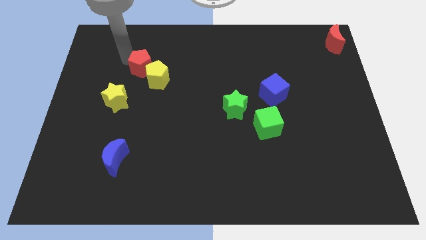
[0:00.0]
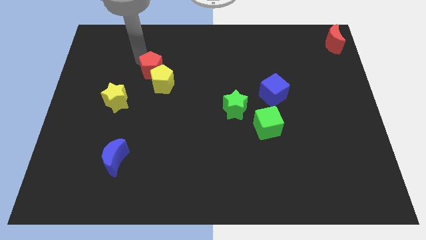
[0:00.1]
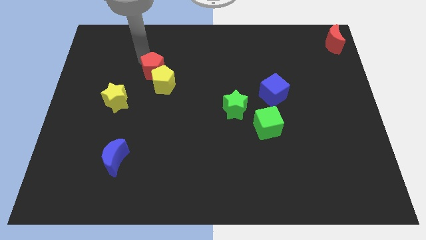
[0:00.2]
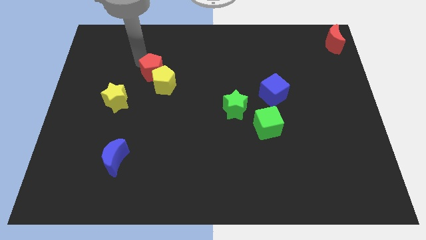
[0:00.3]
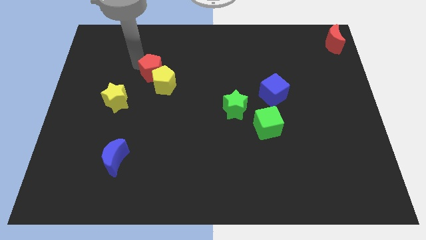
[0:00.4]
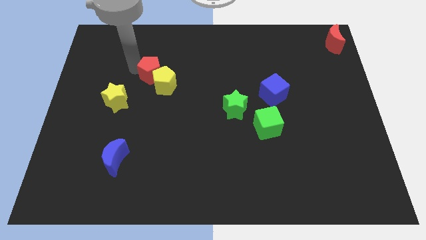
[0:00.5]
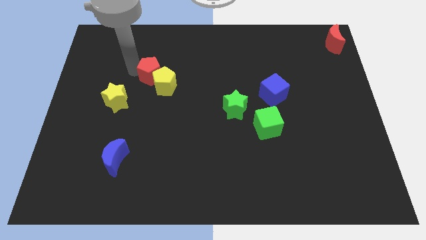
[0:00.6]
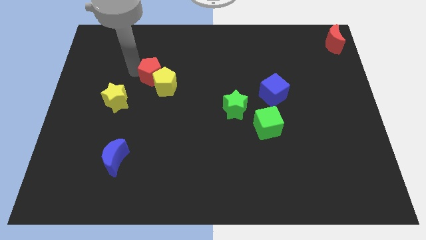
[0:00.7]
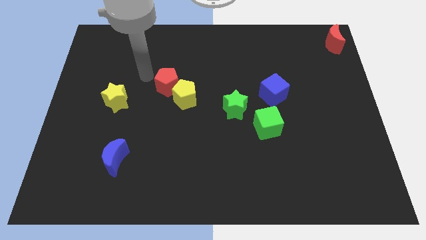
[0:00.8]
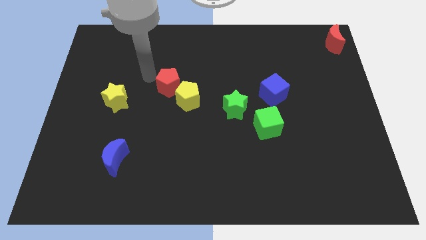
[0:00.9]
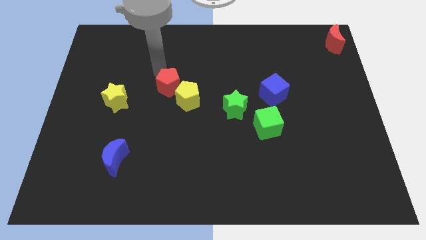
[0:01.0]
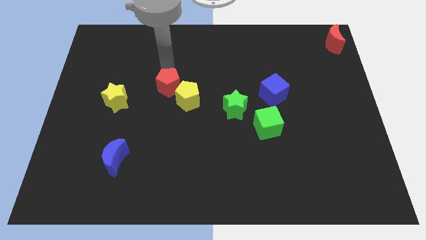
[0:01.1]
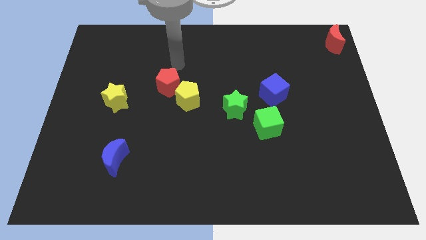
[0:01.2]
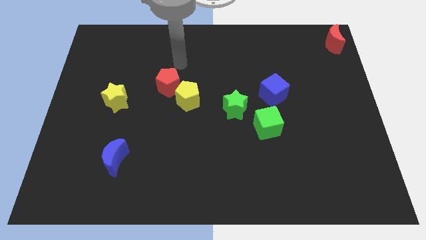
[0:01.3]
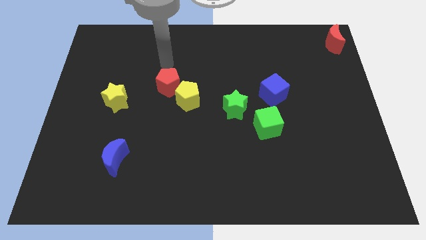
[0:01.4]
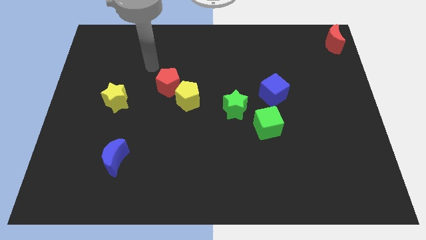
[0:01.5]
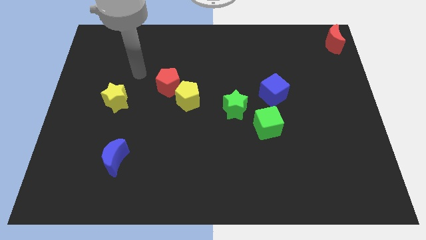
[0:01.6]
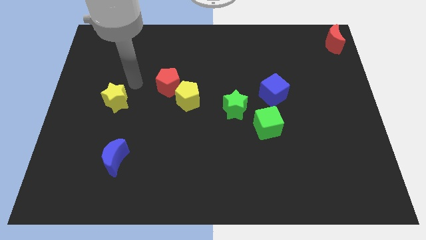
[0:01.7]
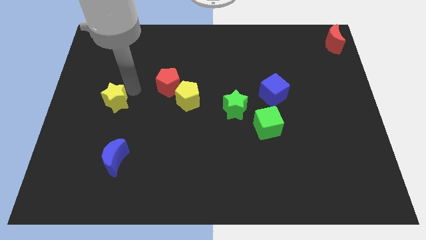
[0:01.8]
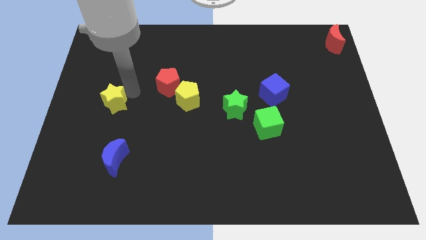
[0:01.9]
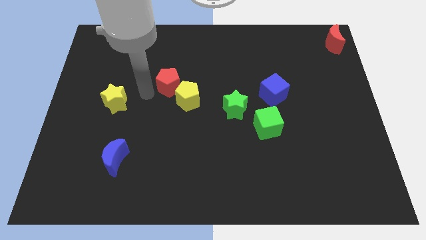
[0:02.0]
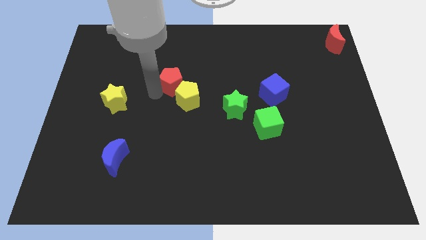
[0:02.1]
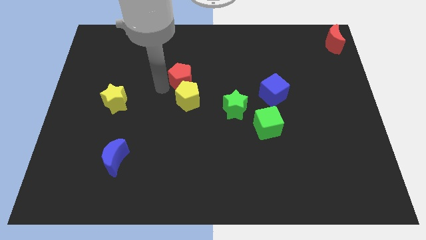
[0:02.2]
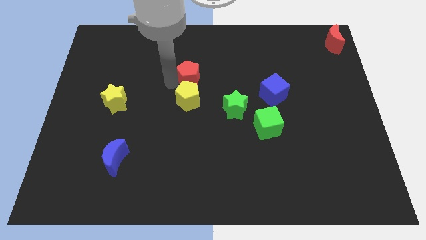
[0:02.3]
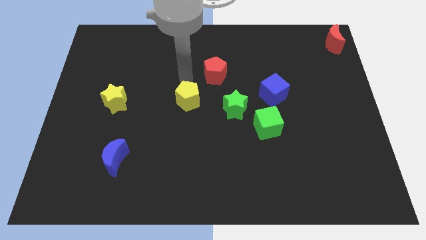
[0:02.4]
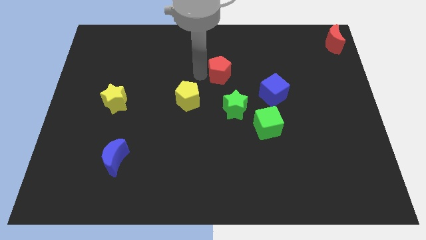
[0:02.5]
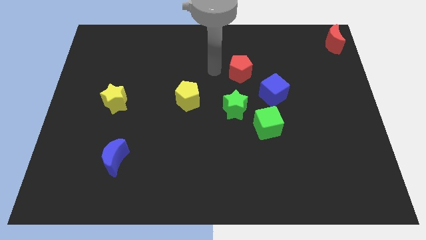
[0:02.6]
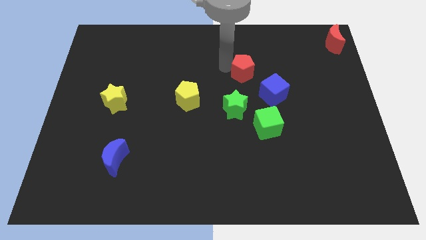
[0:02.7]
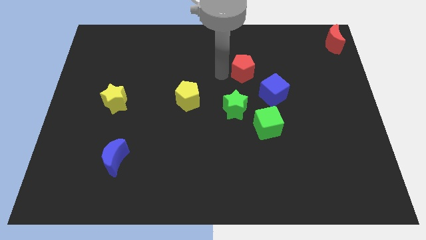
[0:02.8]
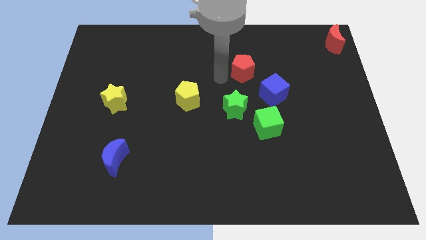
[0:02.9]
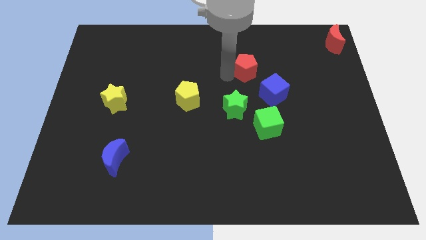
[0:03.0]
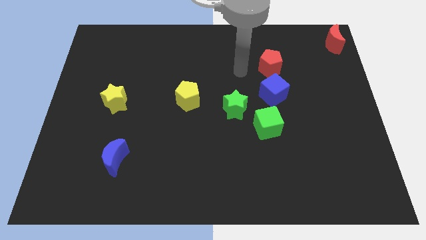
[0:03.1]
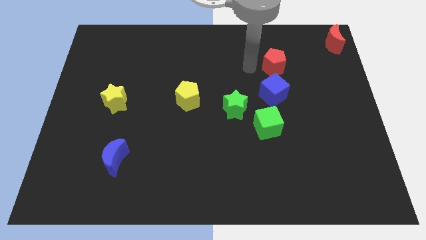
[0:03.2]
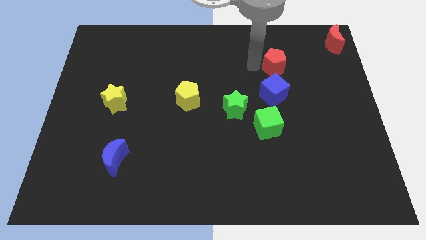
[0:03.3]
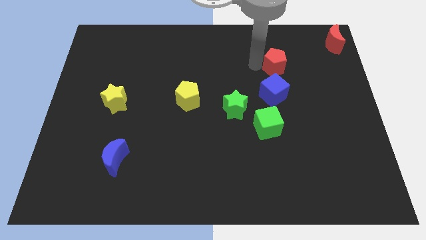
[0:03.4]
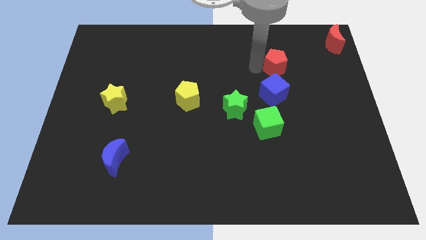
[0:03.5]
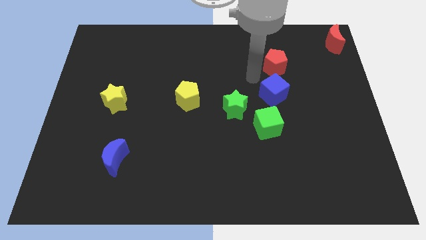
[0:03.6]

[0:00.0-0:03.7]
place the red pentagon above the blue cube

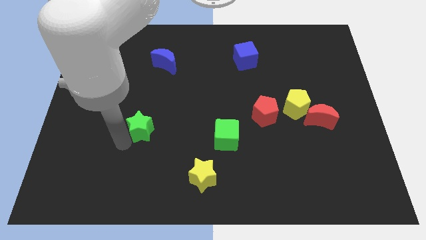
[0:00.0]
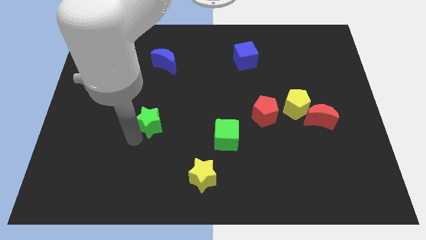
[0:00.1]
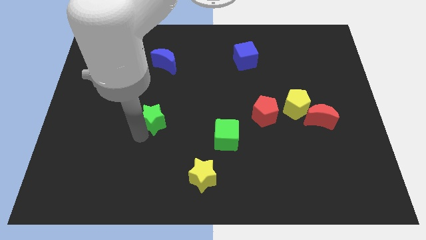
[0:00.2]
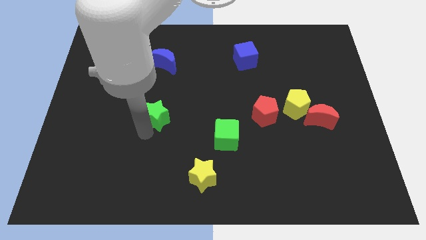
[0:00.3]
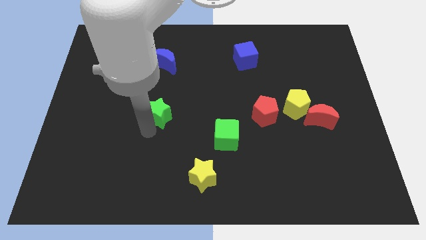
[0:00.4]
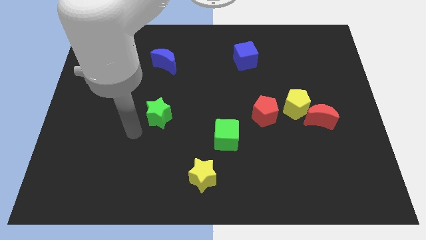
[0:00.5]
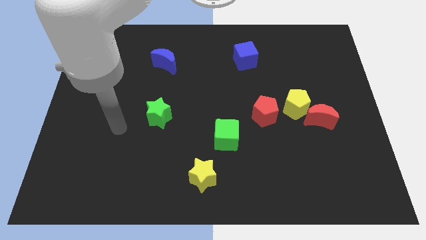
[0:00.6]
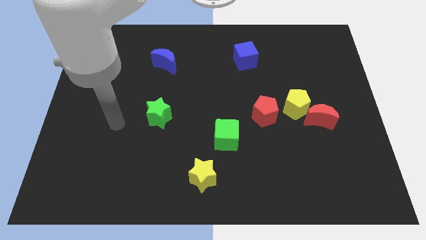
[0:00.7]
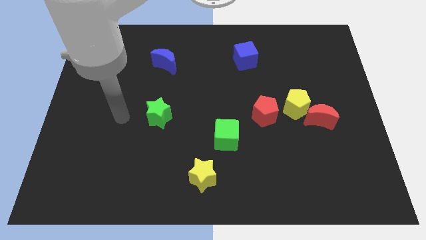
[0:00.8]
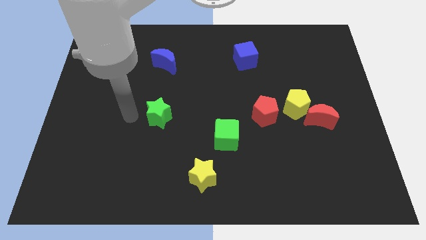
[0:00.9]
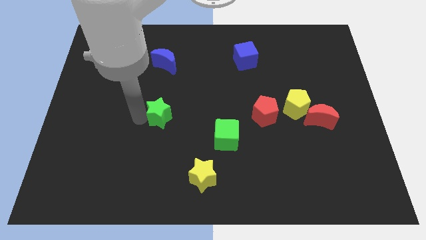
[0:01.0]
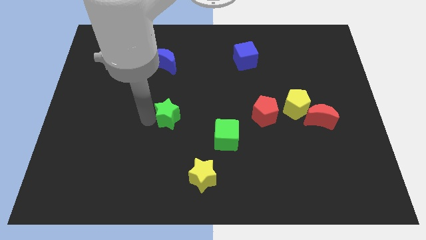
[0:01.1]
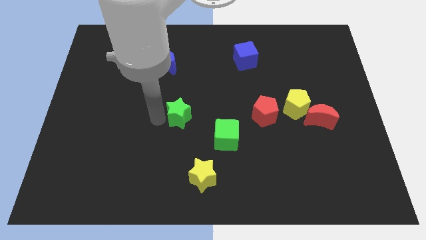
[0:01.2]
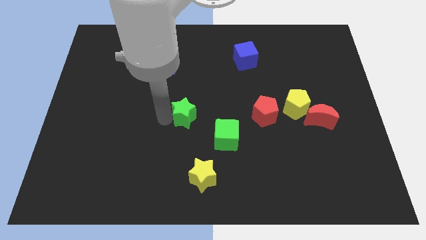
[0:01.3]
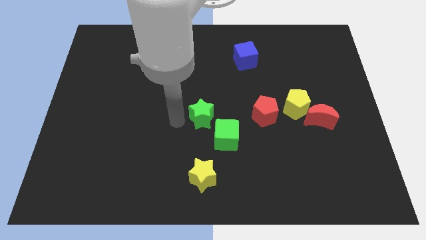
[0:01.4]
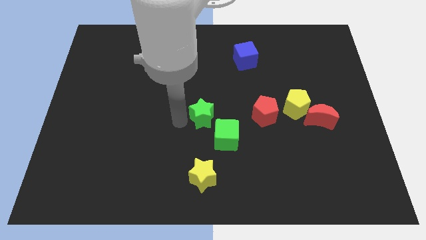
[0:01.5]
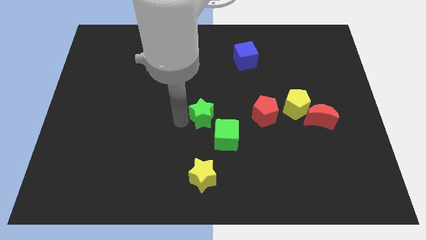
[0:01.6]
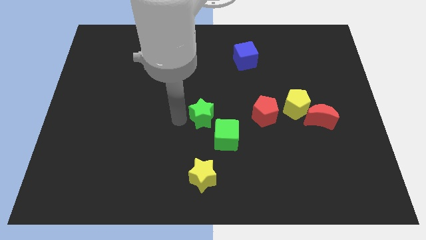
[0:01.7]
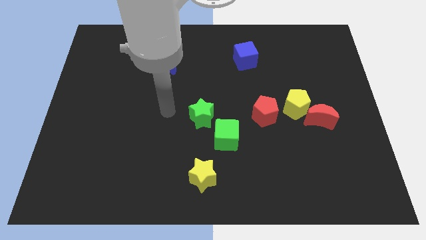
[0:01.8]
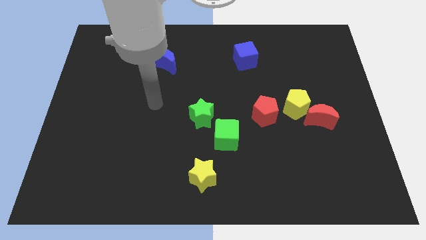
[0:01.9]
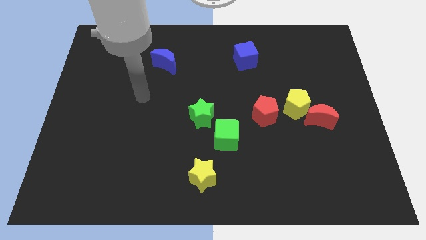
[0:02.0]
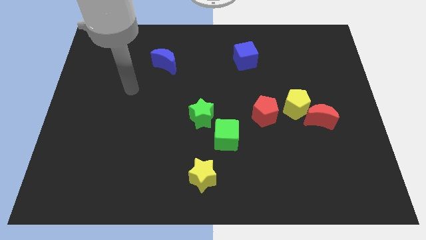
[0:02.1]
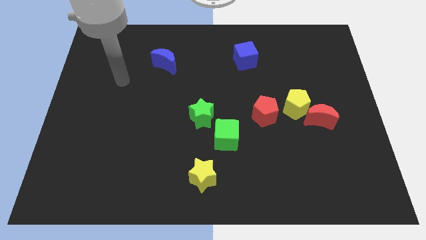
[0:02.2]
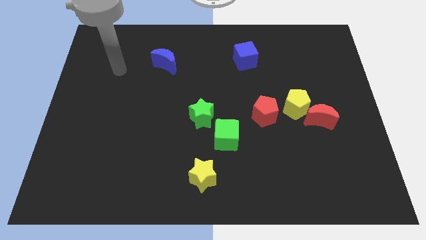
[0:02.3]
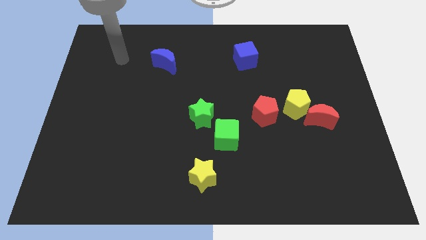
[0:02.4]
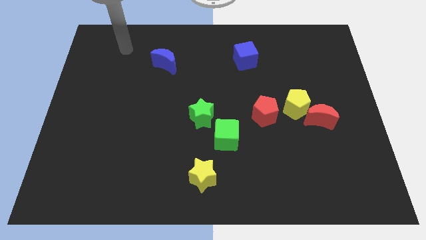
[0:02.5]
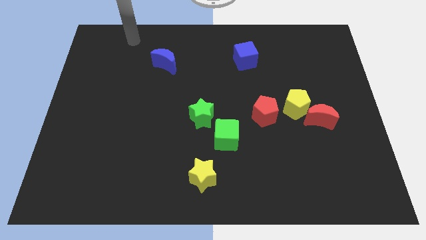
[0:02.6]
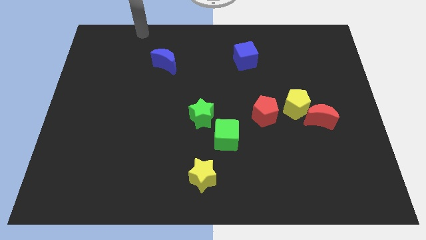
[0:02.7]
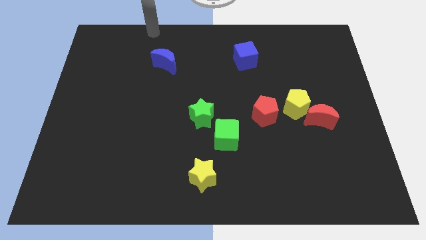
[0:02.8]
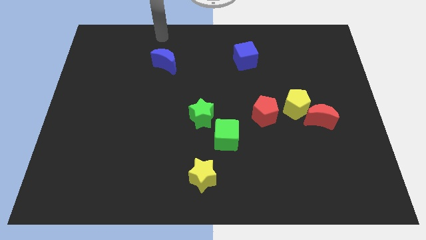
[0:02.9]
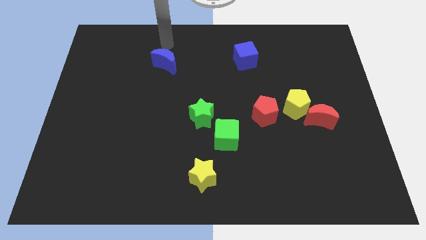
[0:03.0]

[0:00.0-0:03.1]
place the green star at the top left side of green cube

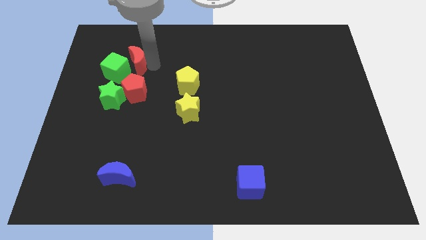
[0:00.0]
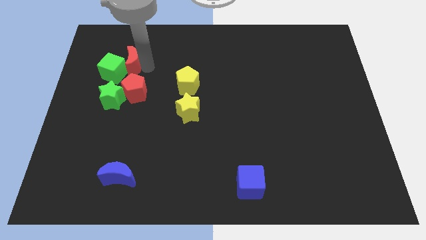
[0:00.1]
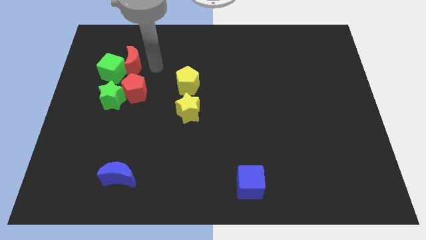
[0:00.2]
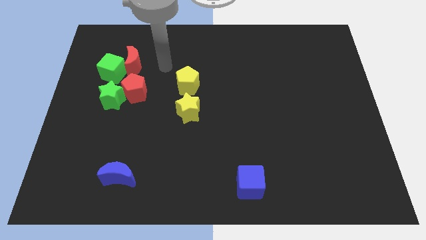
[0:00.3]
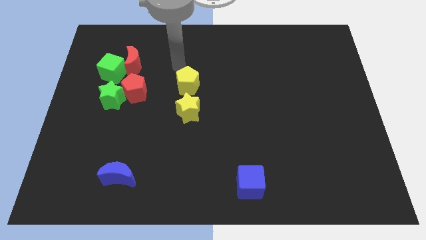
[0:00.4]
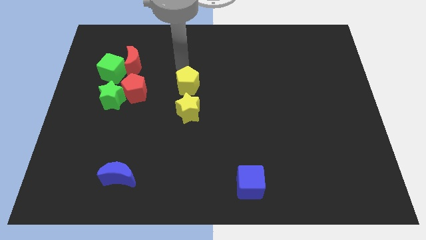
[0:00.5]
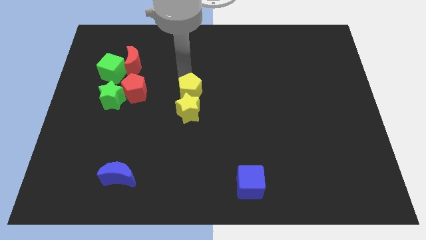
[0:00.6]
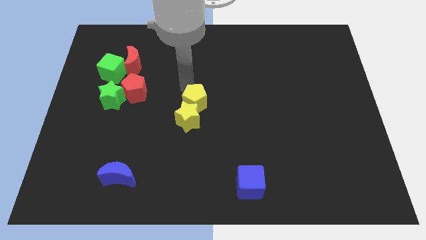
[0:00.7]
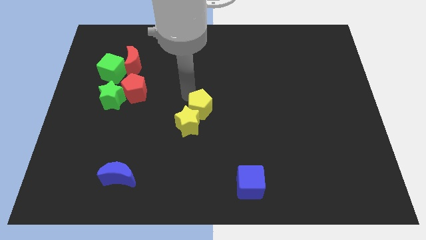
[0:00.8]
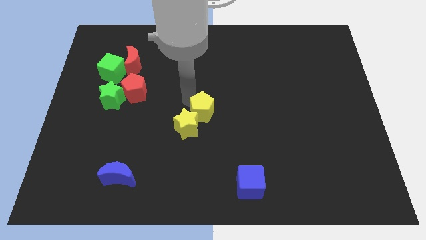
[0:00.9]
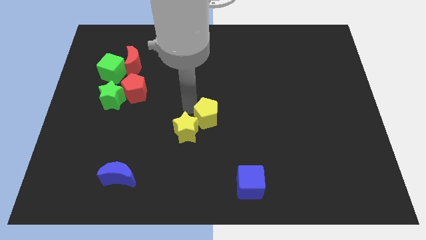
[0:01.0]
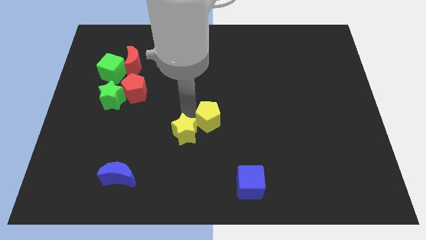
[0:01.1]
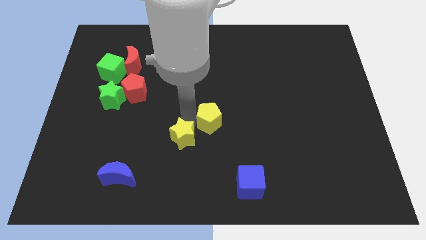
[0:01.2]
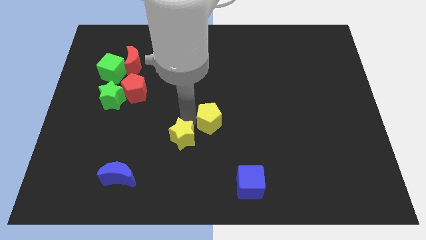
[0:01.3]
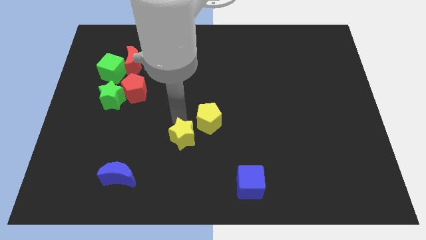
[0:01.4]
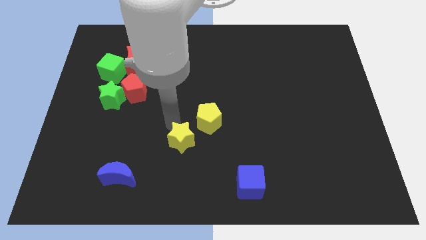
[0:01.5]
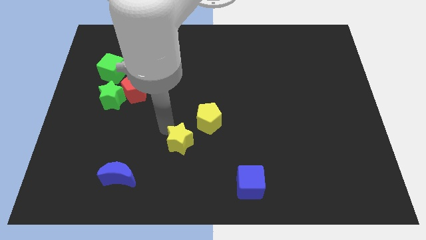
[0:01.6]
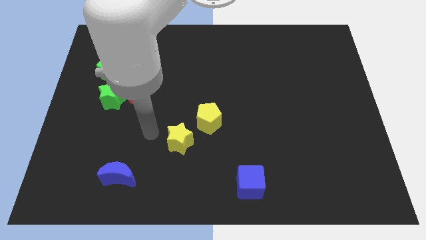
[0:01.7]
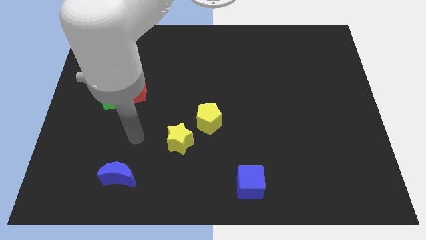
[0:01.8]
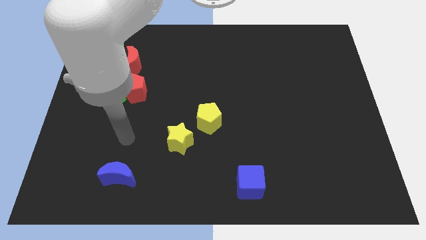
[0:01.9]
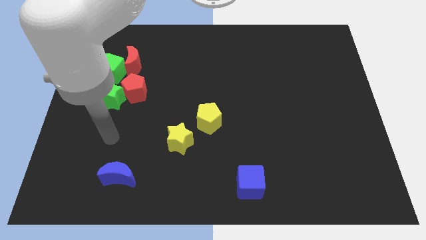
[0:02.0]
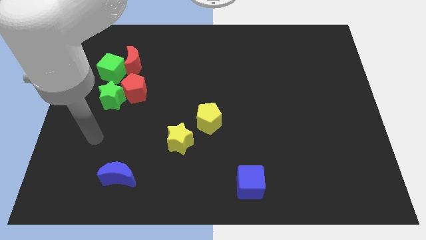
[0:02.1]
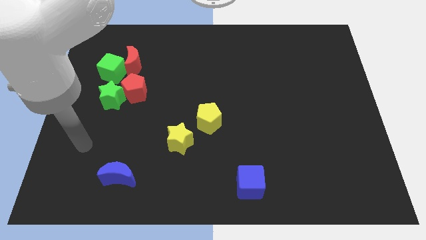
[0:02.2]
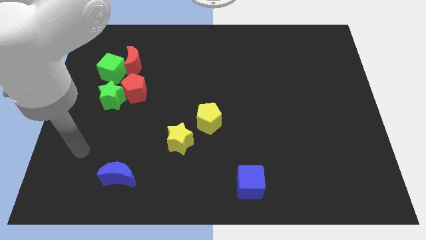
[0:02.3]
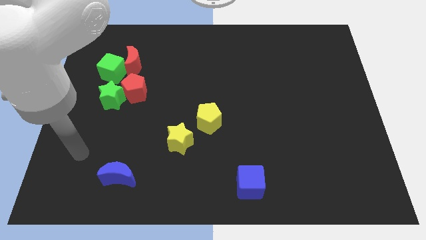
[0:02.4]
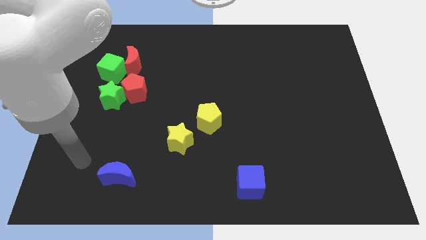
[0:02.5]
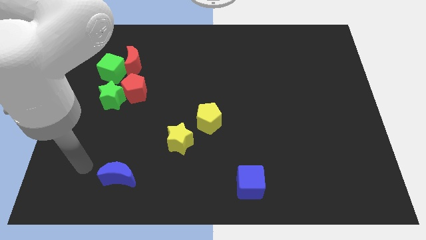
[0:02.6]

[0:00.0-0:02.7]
push the yellow pentagon and yellow star downward
